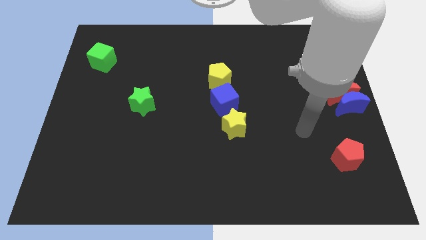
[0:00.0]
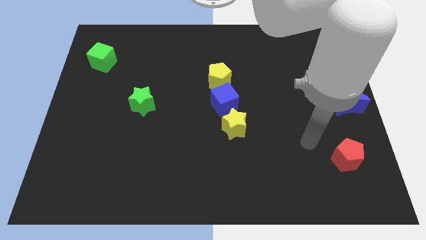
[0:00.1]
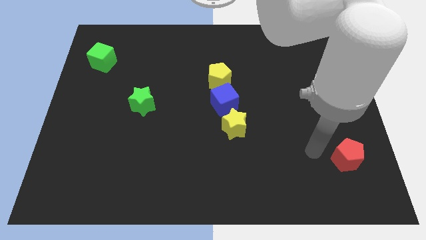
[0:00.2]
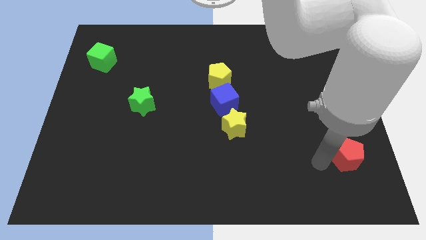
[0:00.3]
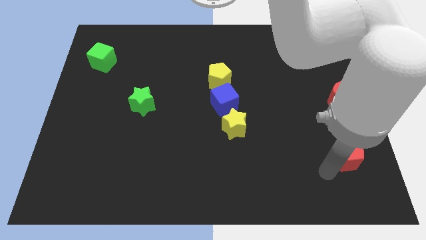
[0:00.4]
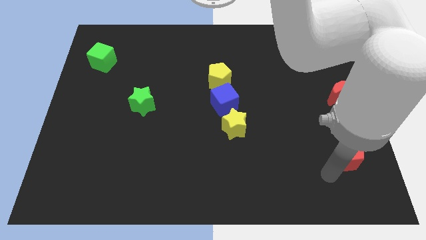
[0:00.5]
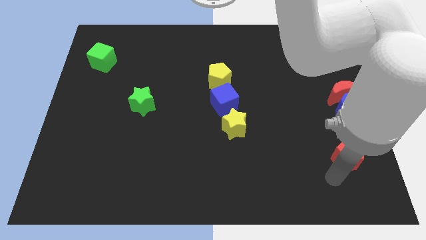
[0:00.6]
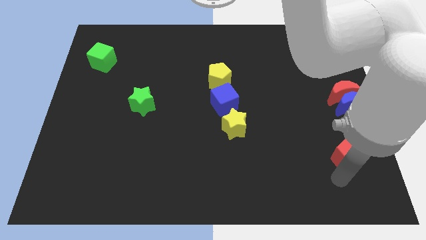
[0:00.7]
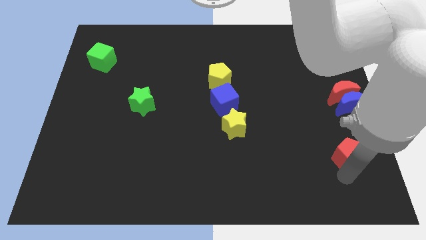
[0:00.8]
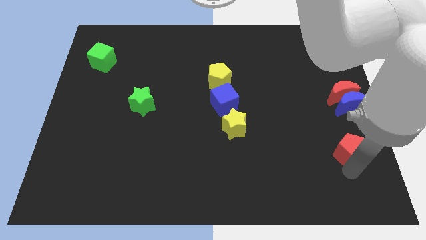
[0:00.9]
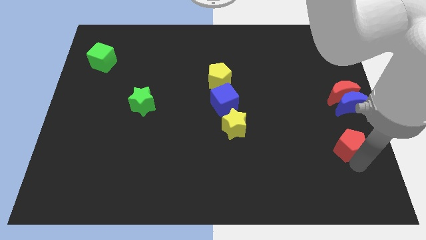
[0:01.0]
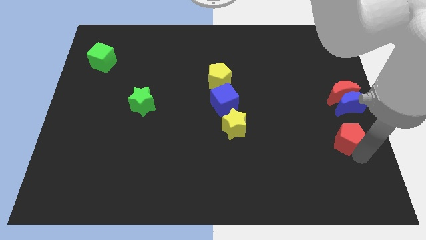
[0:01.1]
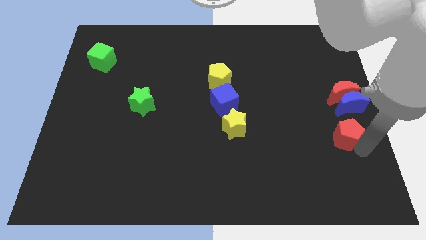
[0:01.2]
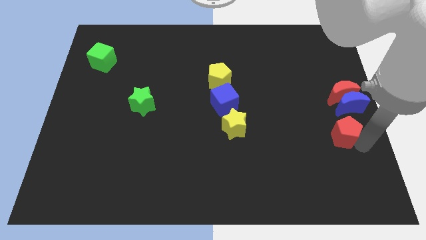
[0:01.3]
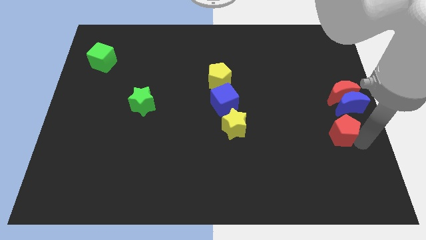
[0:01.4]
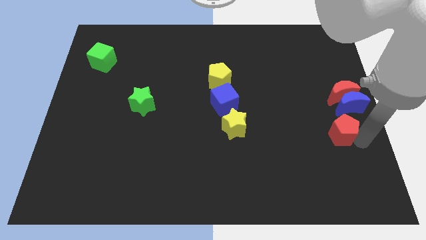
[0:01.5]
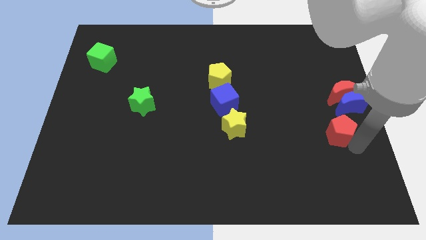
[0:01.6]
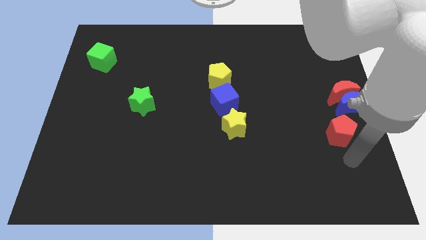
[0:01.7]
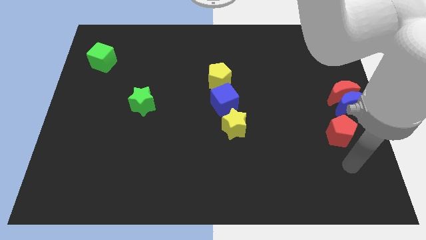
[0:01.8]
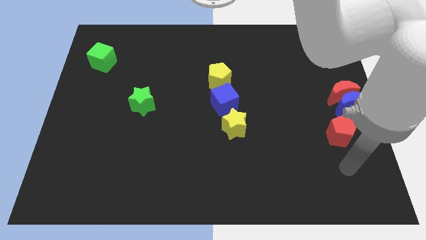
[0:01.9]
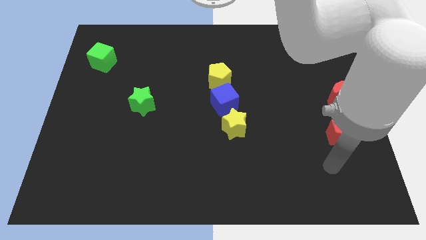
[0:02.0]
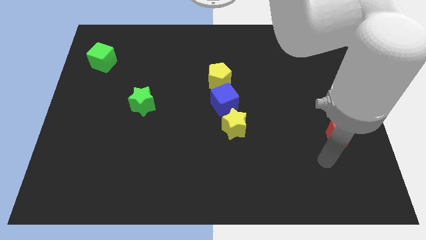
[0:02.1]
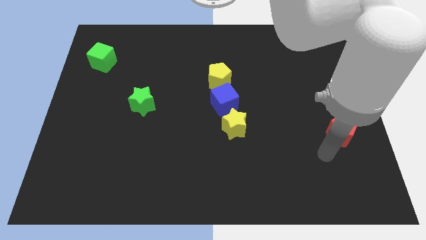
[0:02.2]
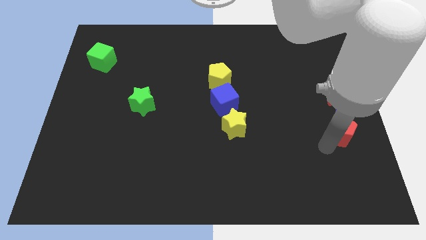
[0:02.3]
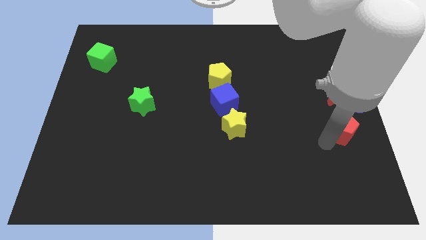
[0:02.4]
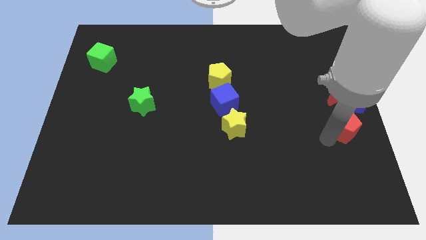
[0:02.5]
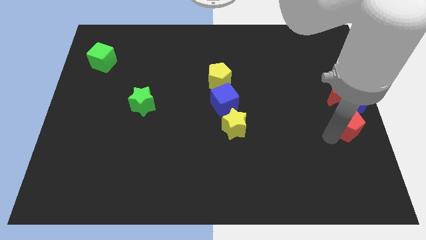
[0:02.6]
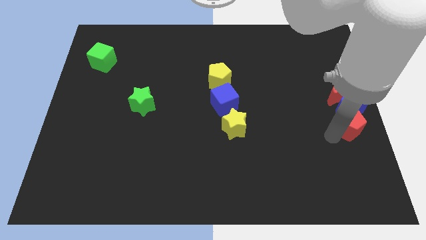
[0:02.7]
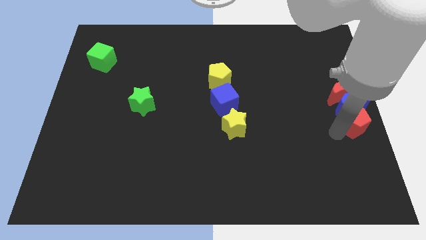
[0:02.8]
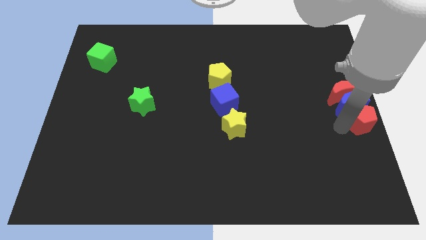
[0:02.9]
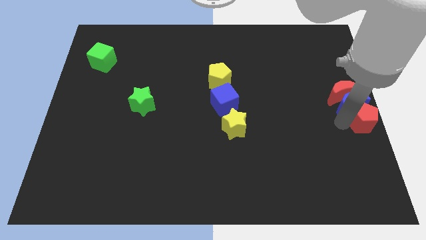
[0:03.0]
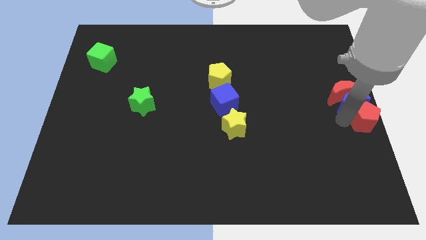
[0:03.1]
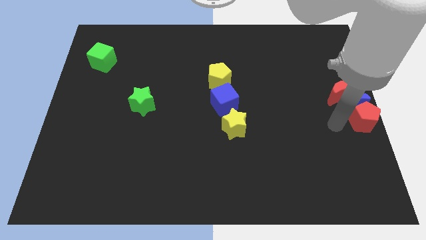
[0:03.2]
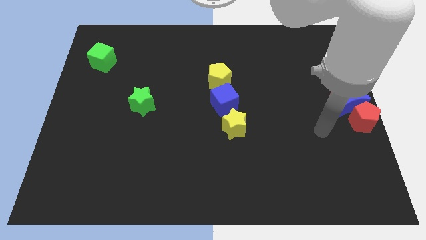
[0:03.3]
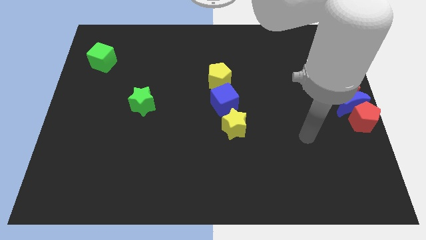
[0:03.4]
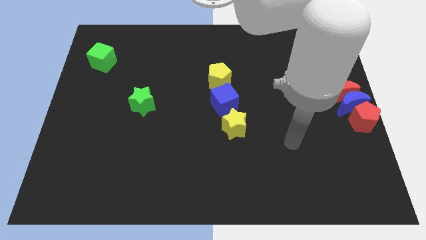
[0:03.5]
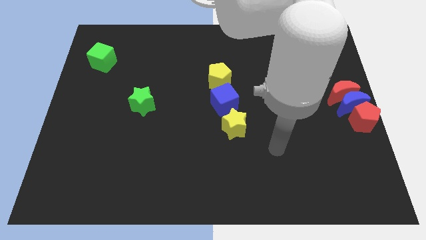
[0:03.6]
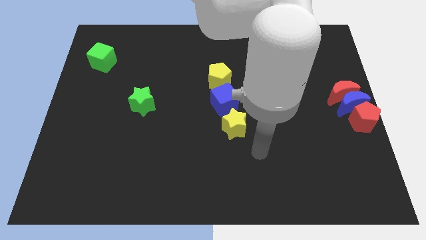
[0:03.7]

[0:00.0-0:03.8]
drag the red pentagon below the blue moon

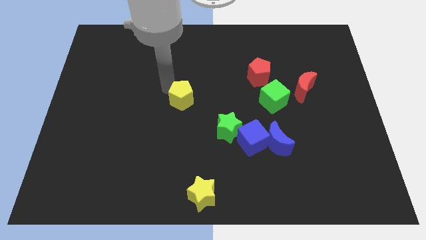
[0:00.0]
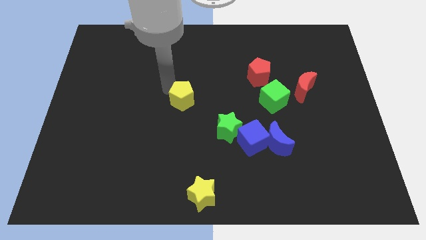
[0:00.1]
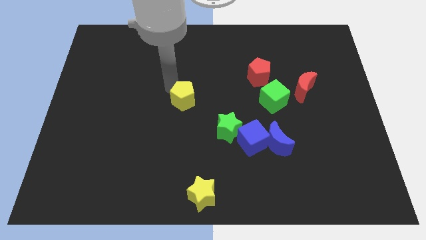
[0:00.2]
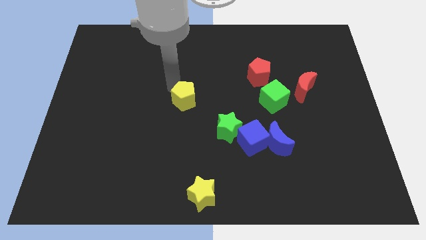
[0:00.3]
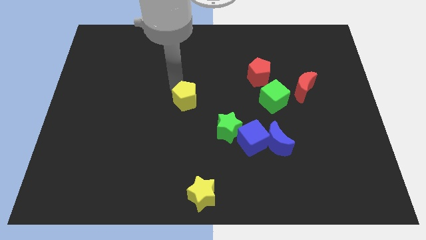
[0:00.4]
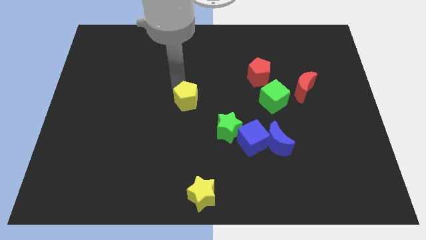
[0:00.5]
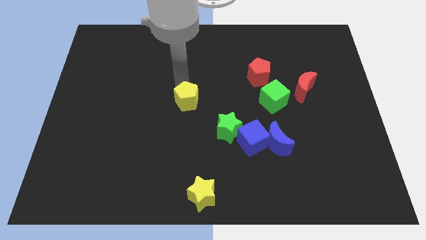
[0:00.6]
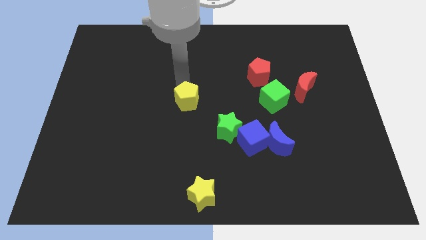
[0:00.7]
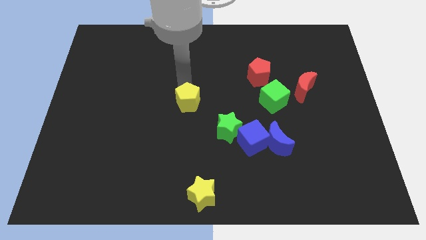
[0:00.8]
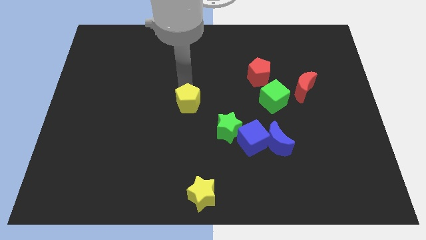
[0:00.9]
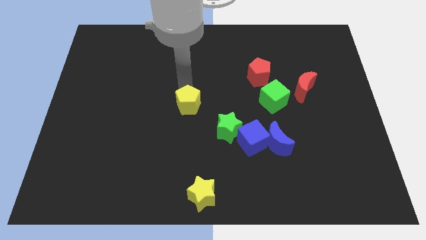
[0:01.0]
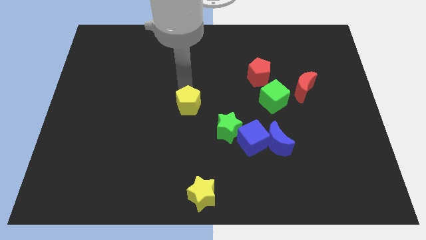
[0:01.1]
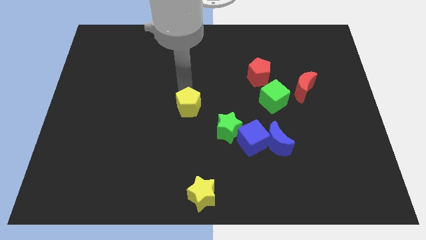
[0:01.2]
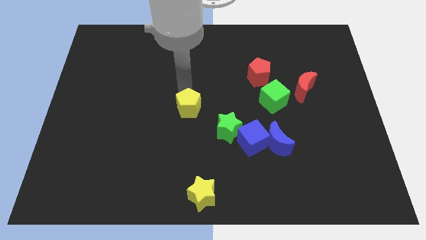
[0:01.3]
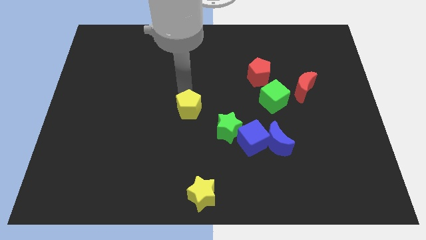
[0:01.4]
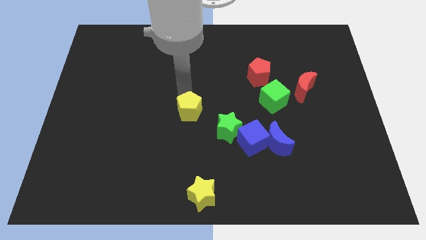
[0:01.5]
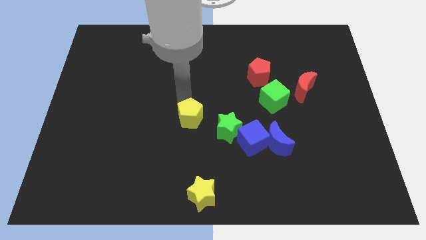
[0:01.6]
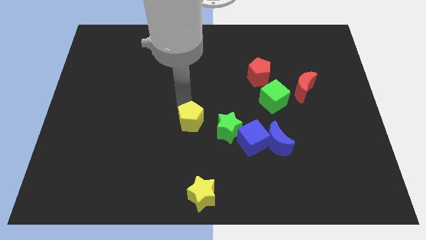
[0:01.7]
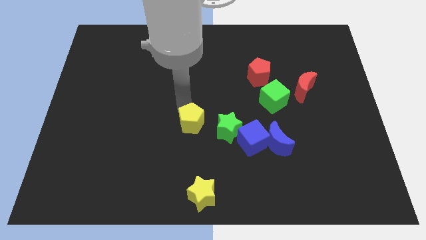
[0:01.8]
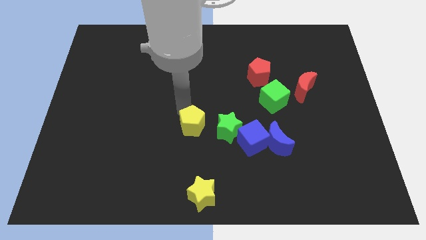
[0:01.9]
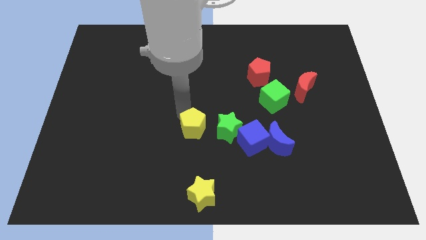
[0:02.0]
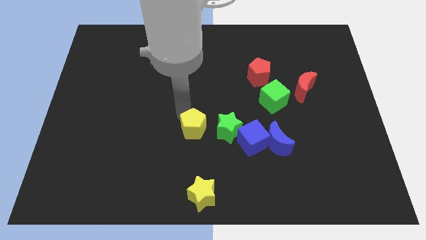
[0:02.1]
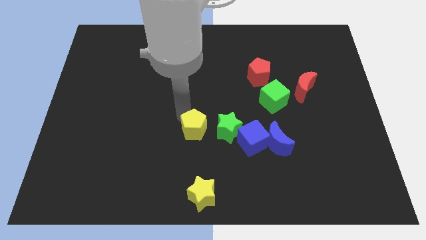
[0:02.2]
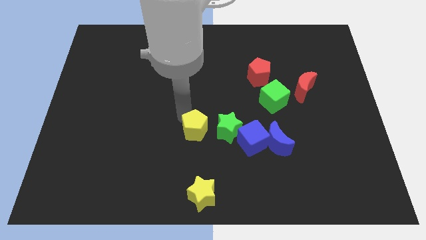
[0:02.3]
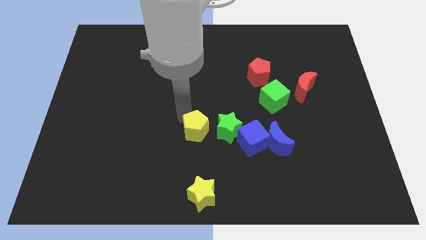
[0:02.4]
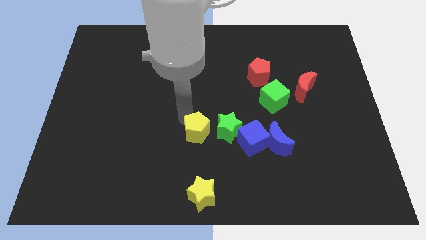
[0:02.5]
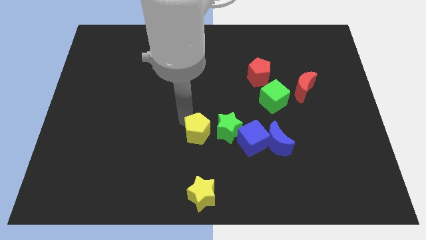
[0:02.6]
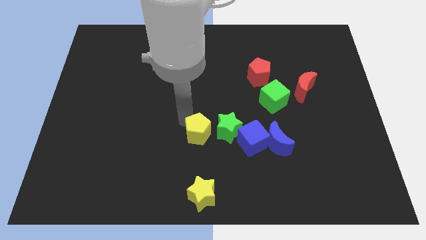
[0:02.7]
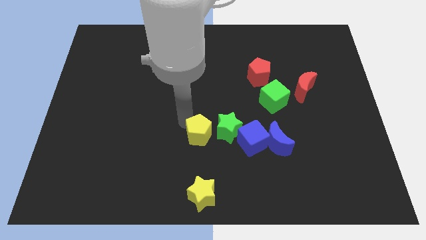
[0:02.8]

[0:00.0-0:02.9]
place the yellow pentagon vertically above the yellow star

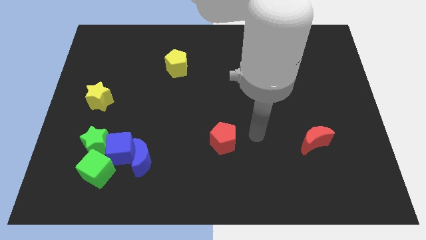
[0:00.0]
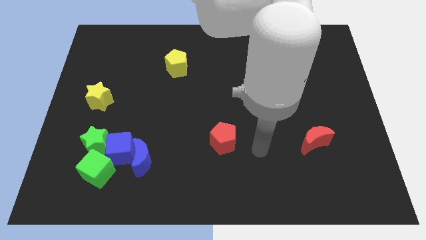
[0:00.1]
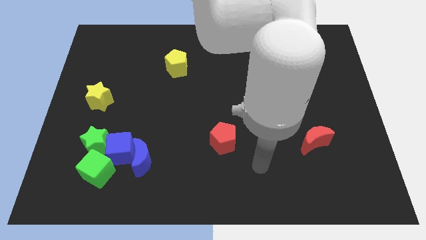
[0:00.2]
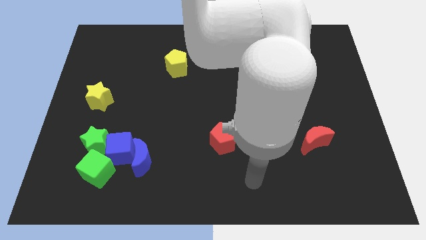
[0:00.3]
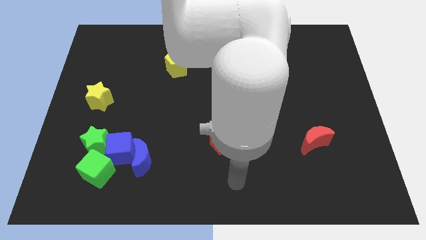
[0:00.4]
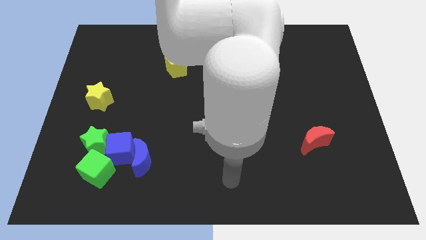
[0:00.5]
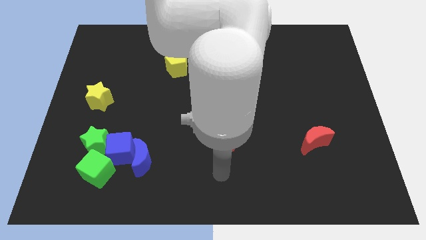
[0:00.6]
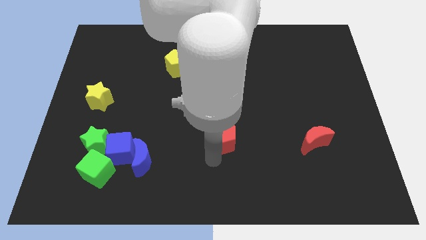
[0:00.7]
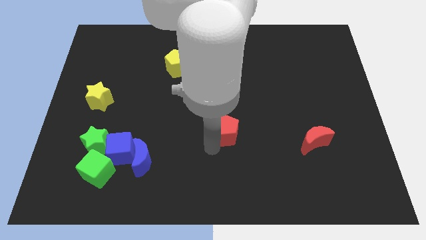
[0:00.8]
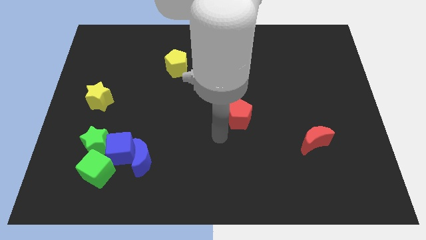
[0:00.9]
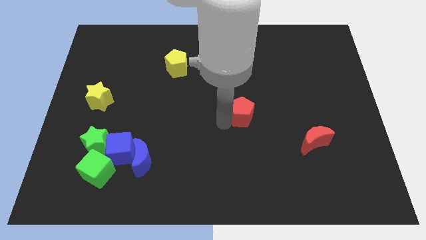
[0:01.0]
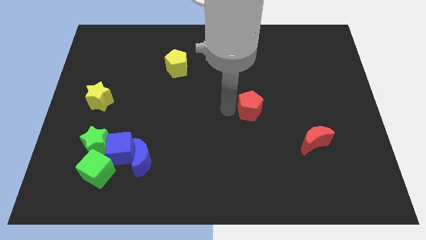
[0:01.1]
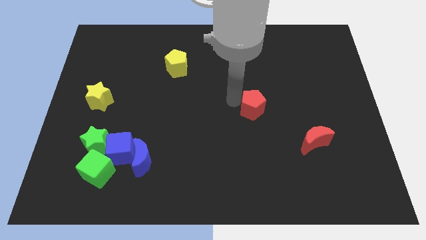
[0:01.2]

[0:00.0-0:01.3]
push the red pentagon towards the center right

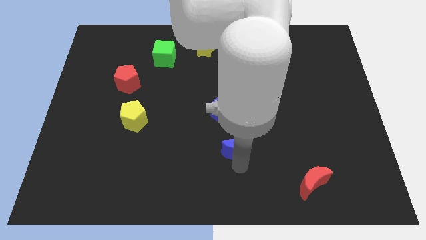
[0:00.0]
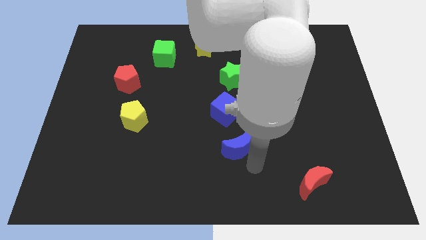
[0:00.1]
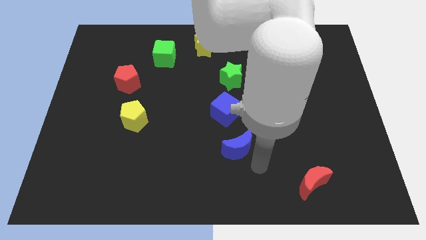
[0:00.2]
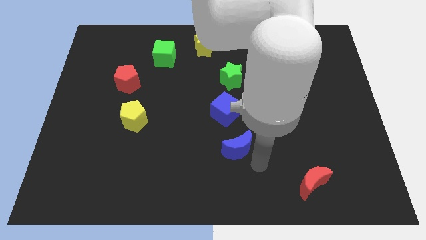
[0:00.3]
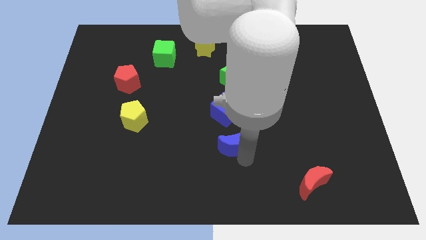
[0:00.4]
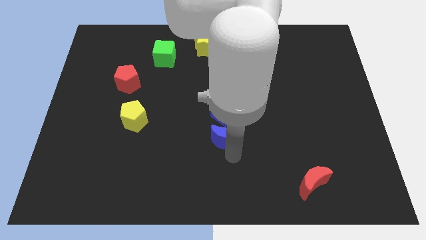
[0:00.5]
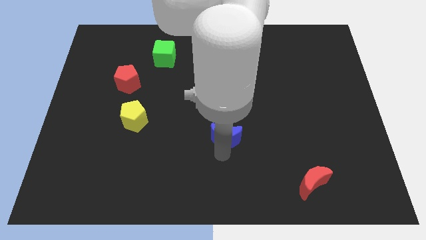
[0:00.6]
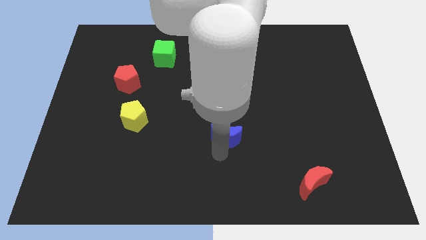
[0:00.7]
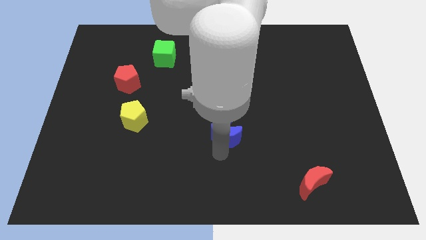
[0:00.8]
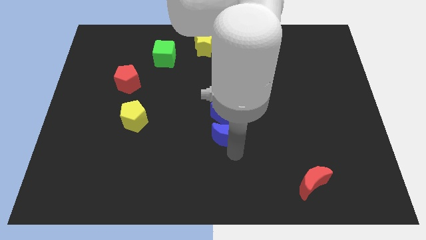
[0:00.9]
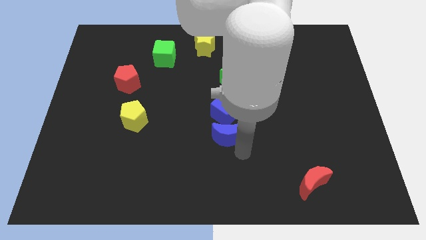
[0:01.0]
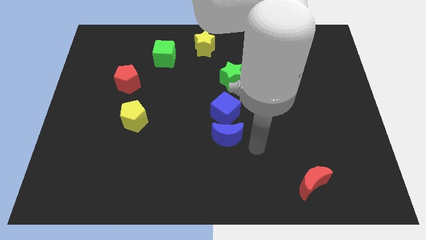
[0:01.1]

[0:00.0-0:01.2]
slide the blue moon below blue cube
